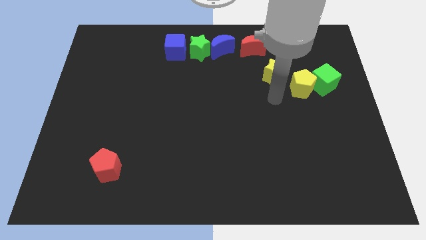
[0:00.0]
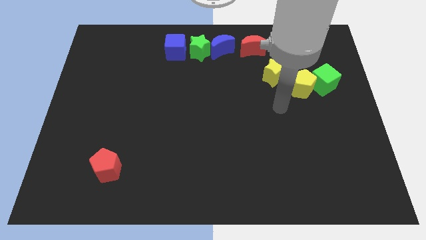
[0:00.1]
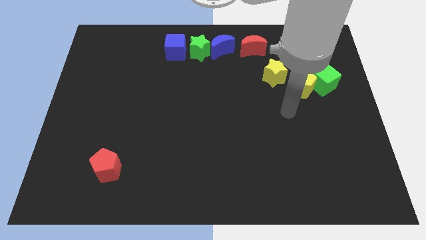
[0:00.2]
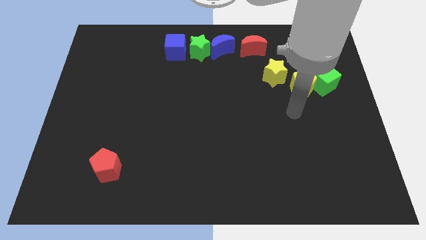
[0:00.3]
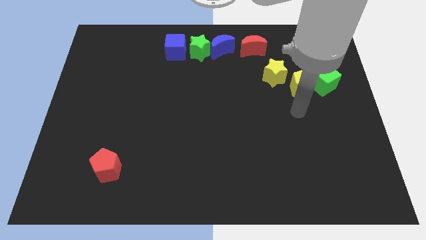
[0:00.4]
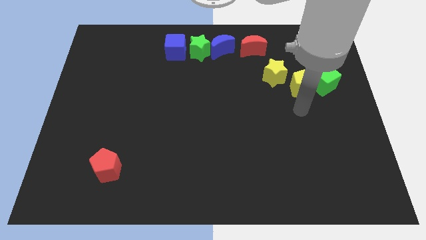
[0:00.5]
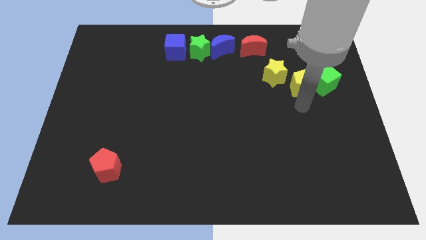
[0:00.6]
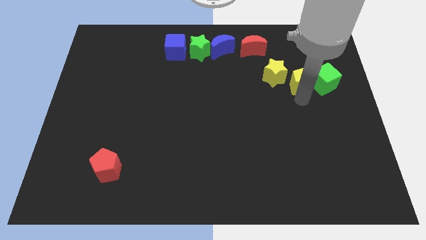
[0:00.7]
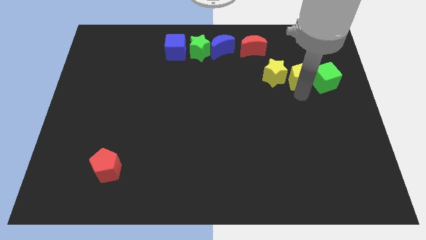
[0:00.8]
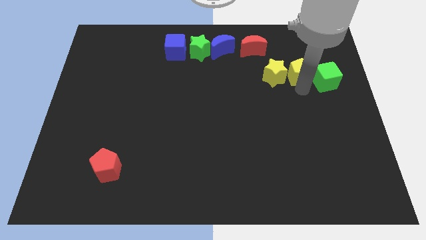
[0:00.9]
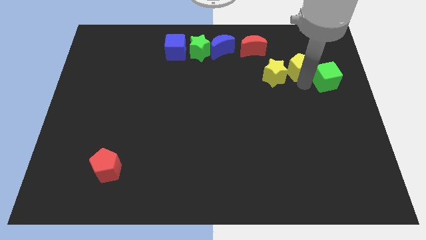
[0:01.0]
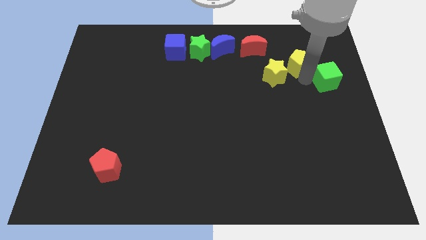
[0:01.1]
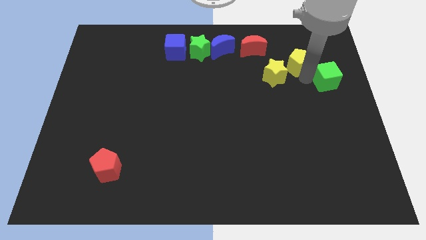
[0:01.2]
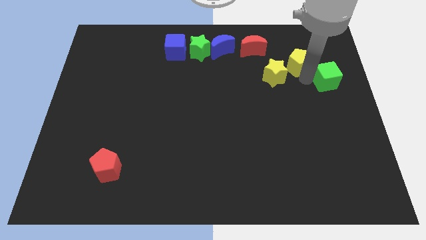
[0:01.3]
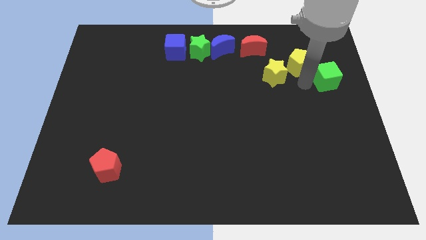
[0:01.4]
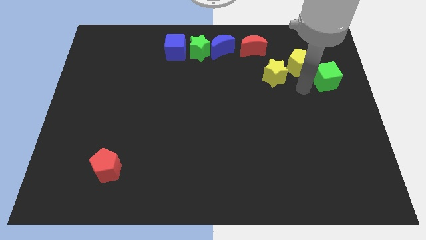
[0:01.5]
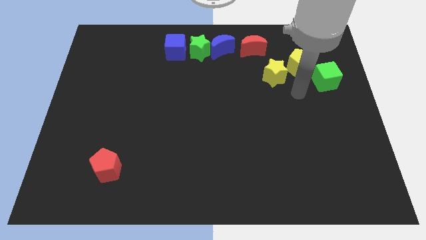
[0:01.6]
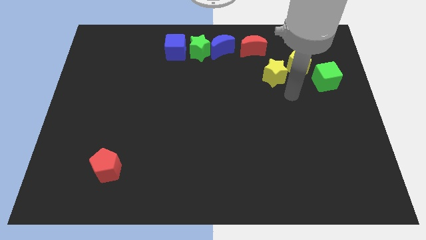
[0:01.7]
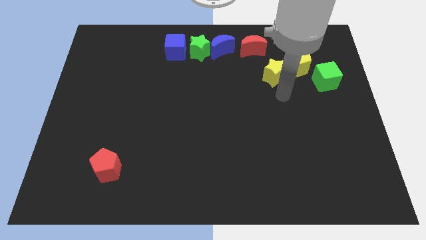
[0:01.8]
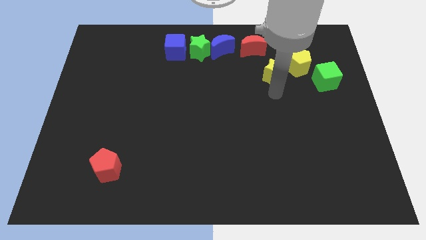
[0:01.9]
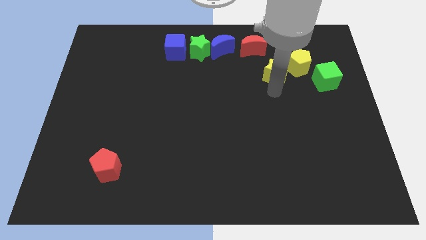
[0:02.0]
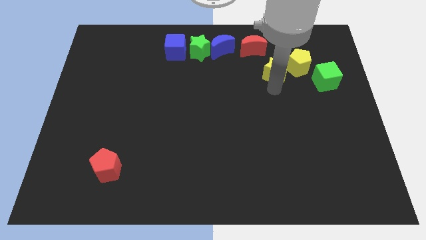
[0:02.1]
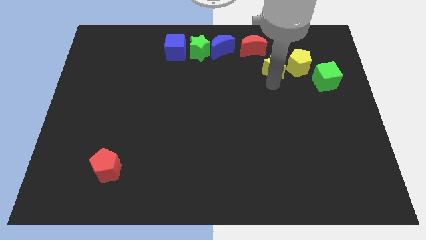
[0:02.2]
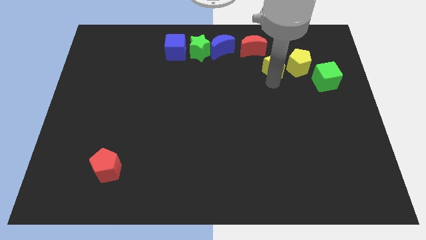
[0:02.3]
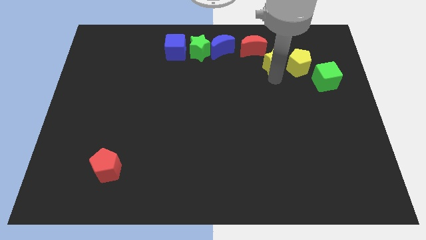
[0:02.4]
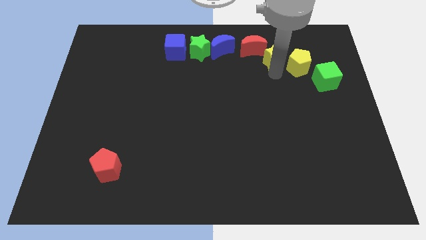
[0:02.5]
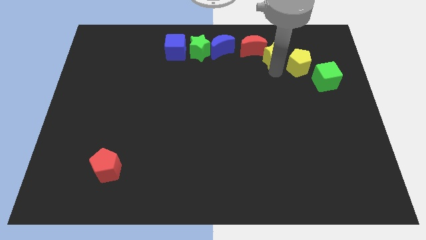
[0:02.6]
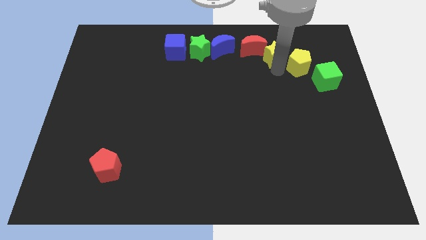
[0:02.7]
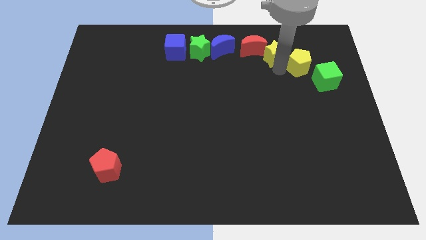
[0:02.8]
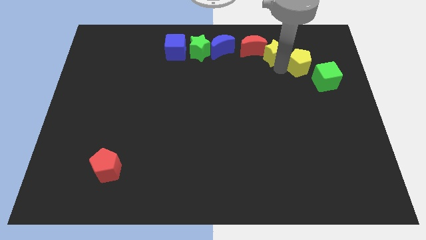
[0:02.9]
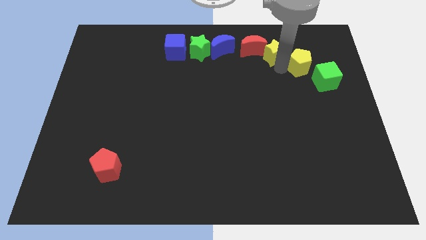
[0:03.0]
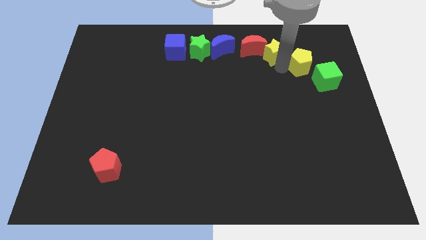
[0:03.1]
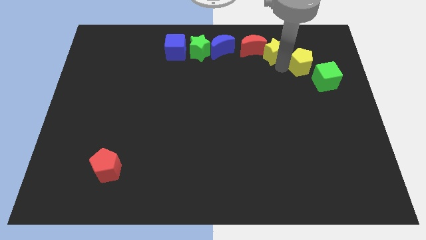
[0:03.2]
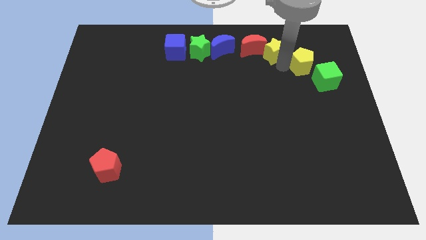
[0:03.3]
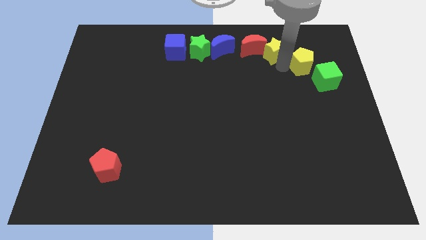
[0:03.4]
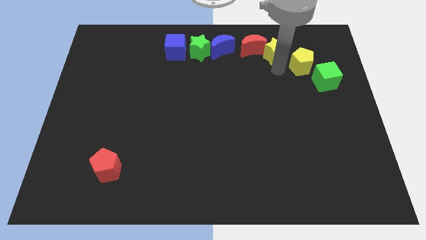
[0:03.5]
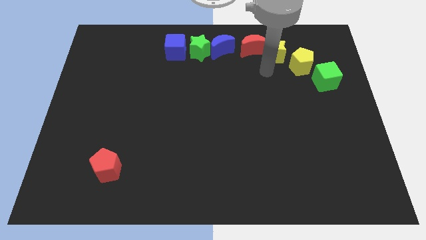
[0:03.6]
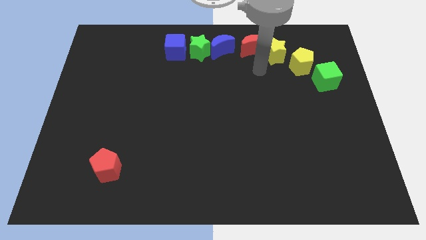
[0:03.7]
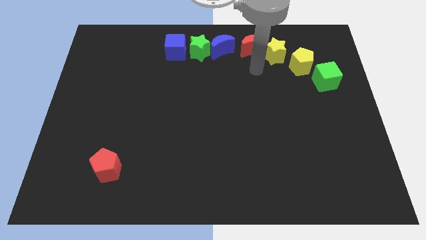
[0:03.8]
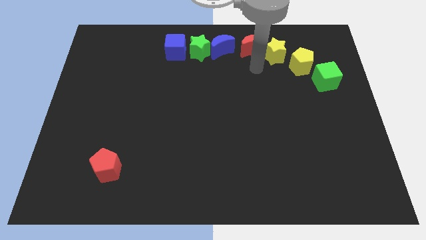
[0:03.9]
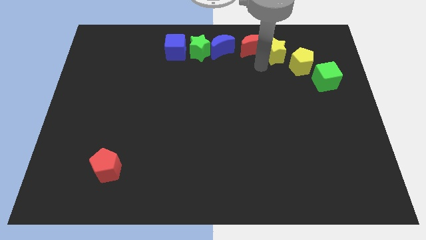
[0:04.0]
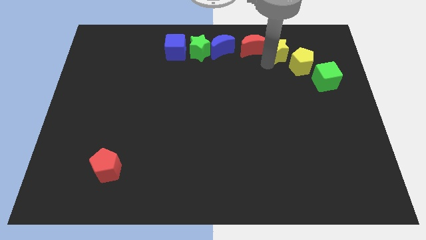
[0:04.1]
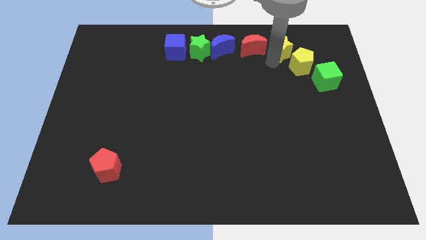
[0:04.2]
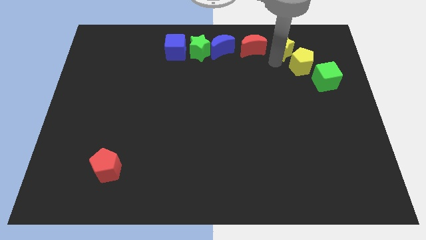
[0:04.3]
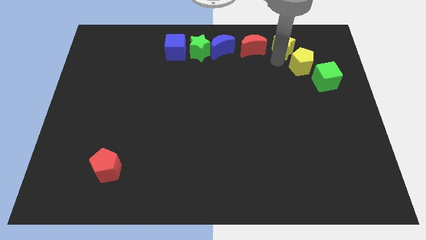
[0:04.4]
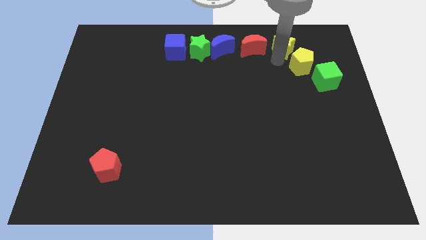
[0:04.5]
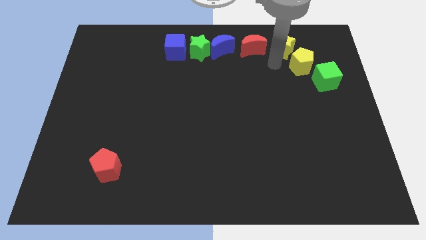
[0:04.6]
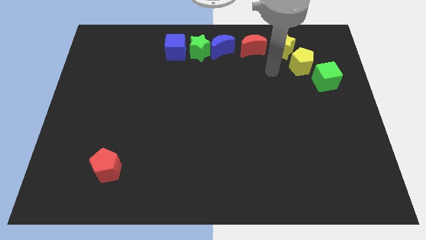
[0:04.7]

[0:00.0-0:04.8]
place yellow star to the right of red moon

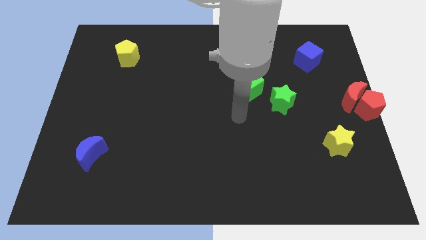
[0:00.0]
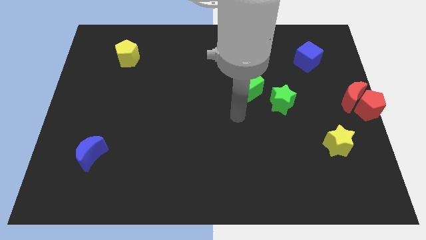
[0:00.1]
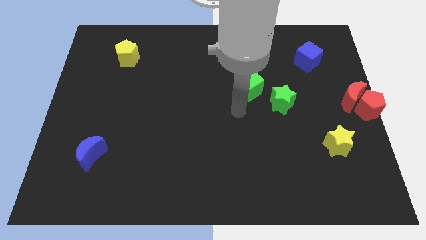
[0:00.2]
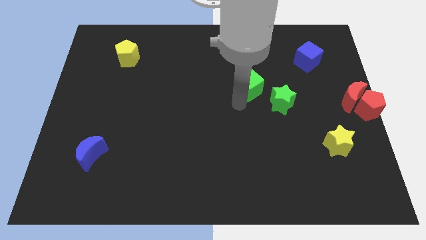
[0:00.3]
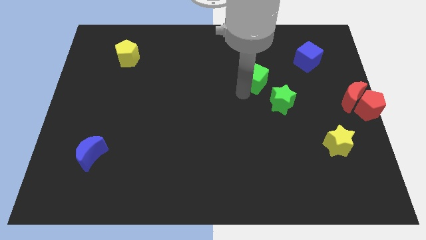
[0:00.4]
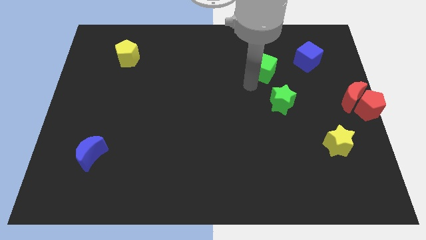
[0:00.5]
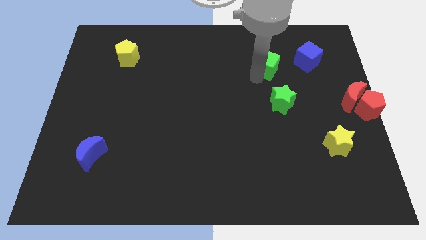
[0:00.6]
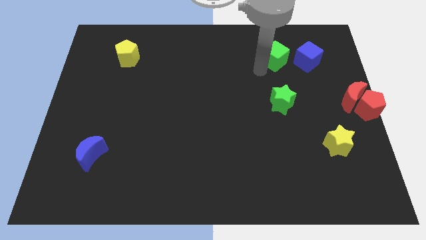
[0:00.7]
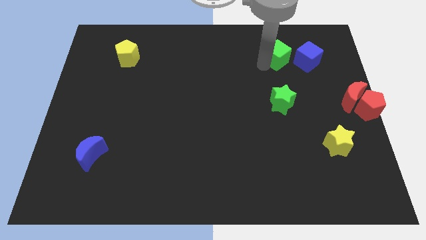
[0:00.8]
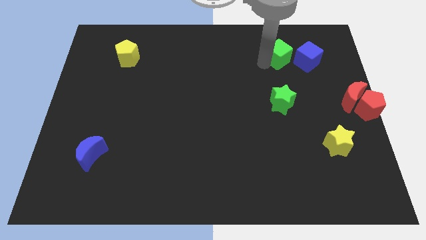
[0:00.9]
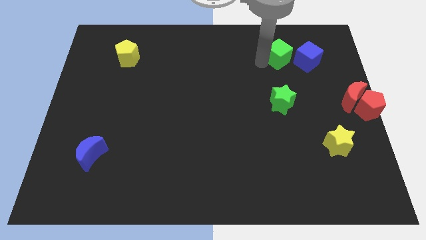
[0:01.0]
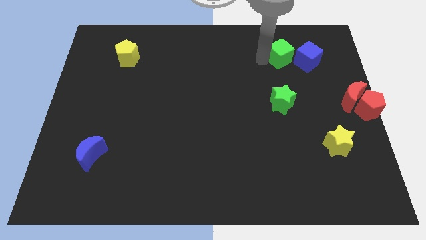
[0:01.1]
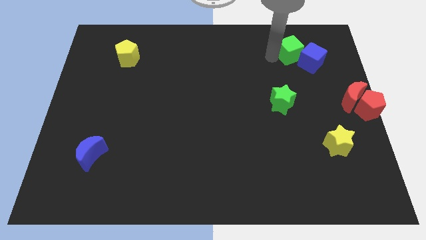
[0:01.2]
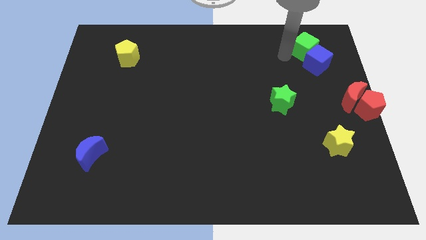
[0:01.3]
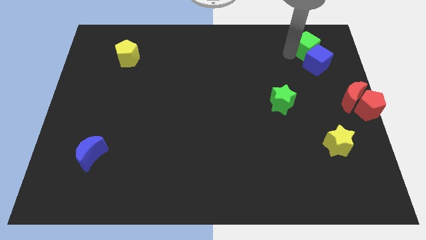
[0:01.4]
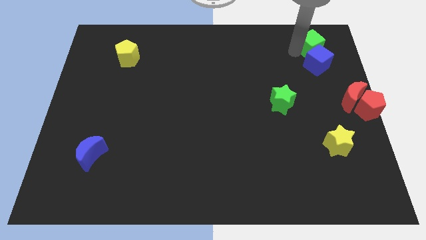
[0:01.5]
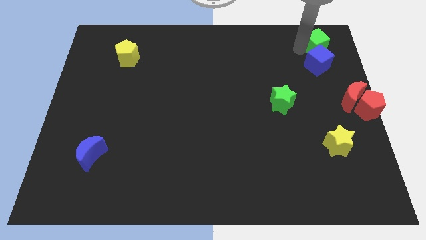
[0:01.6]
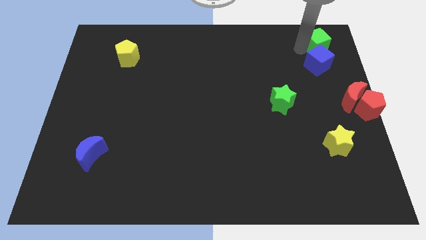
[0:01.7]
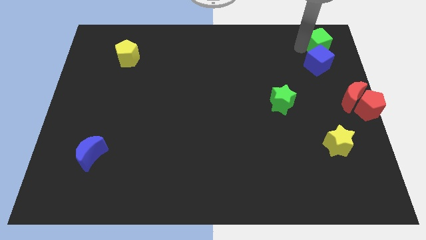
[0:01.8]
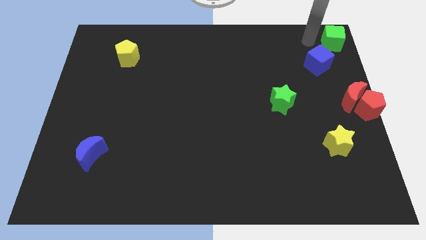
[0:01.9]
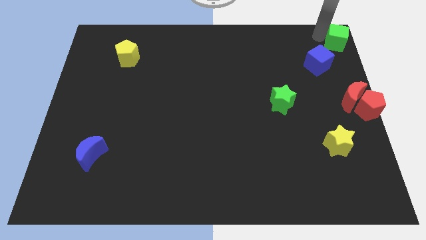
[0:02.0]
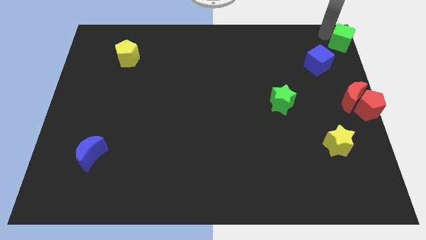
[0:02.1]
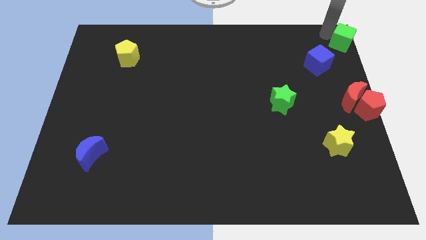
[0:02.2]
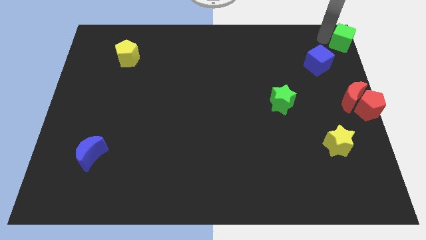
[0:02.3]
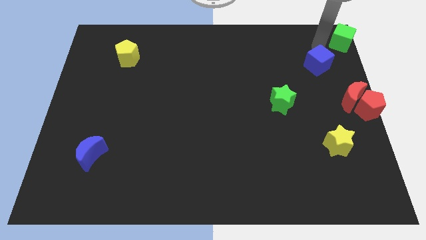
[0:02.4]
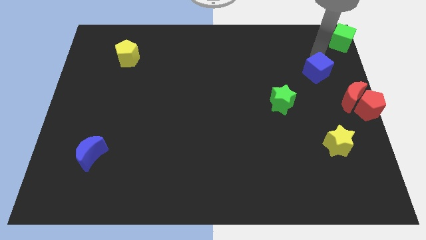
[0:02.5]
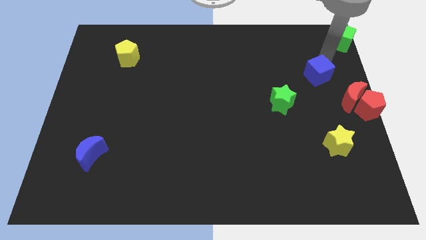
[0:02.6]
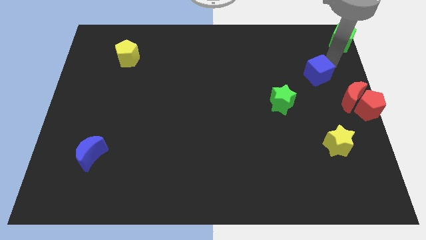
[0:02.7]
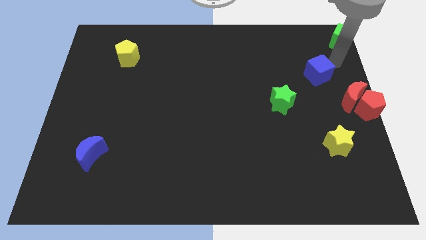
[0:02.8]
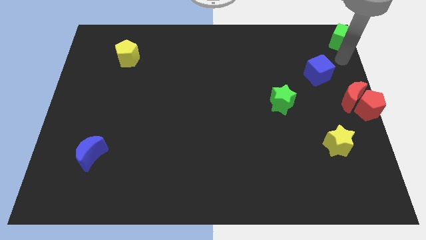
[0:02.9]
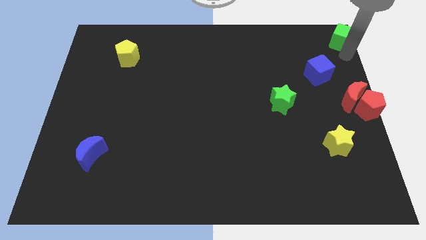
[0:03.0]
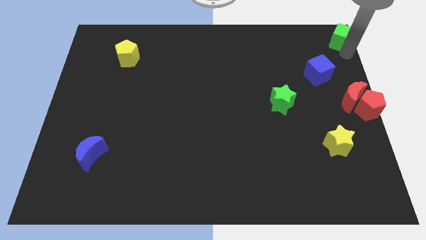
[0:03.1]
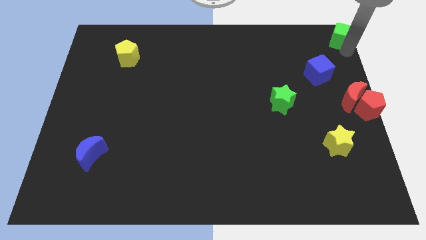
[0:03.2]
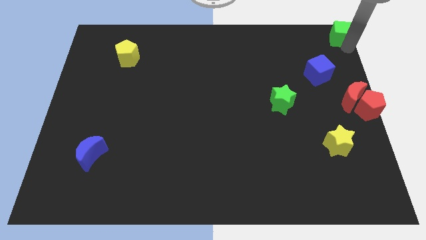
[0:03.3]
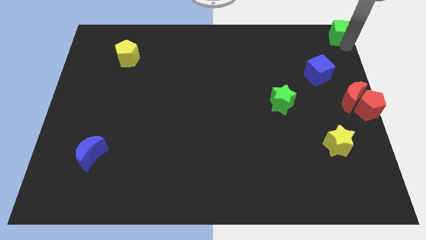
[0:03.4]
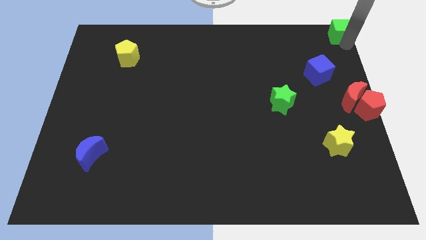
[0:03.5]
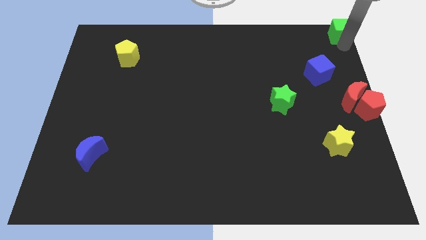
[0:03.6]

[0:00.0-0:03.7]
move the green cube to the top right corner of the board

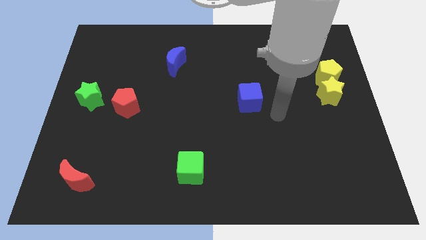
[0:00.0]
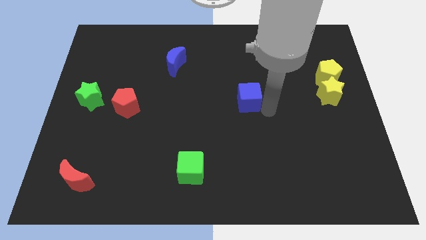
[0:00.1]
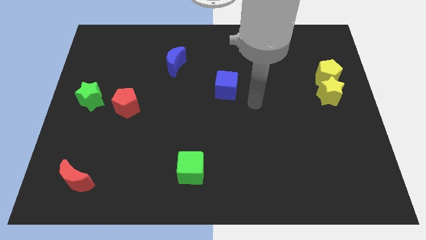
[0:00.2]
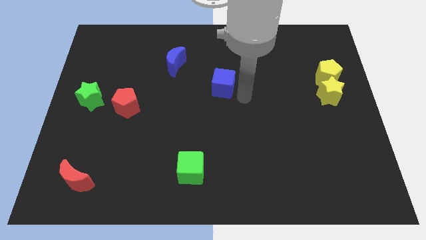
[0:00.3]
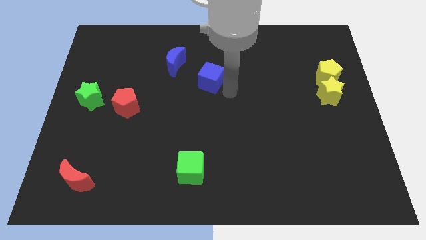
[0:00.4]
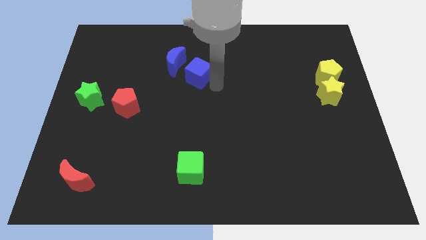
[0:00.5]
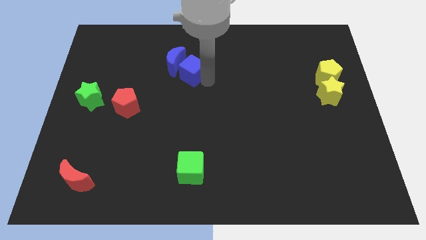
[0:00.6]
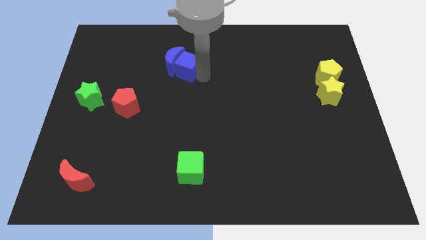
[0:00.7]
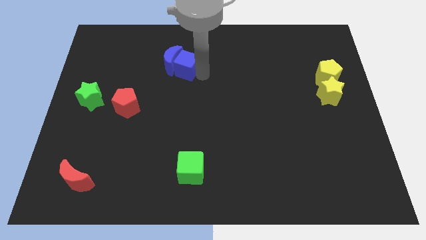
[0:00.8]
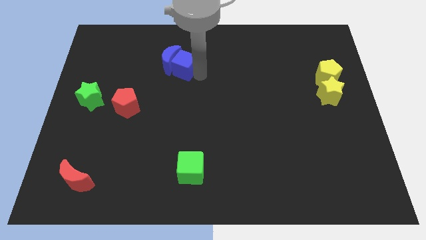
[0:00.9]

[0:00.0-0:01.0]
push the blue cube into the right of the blue crescent
